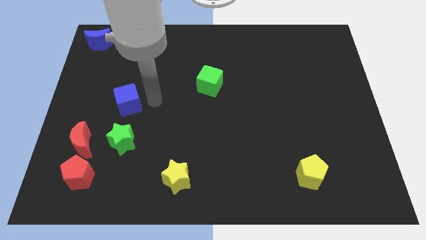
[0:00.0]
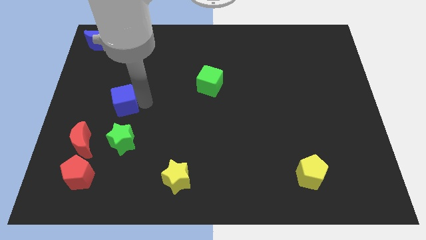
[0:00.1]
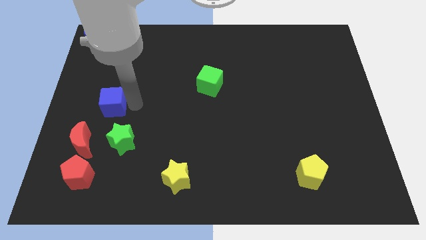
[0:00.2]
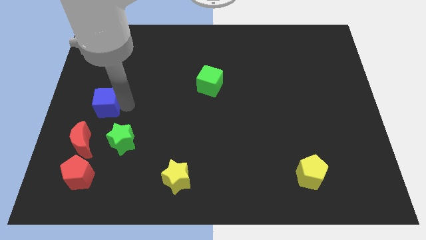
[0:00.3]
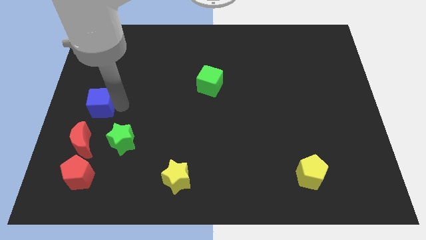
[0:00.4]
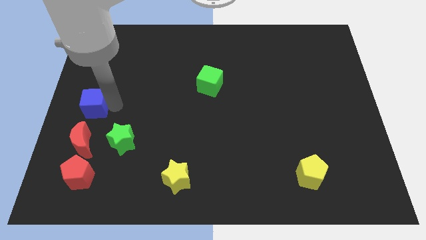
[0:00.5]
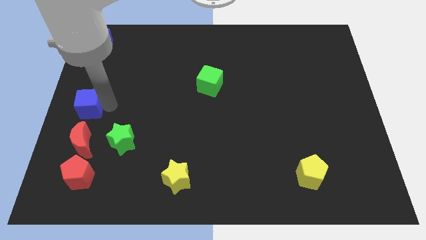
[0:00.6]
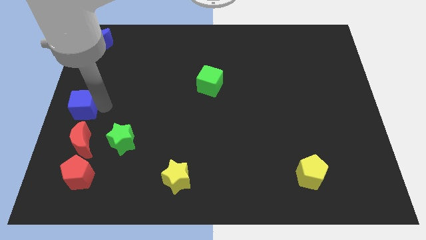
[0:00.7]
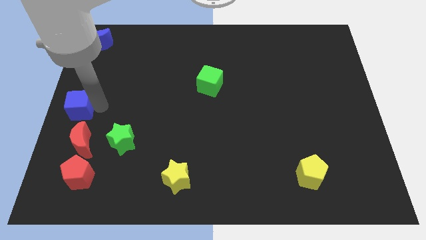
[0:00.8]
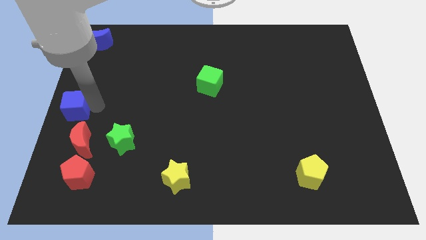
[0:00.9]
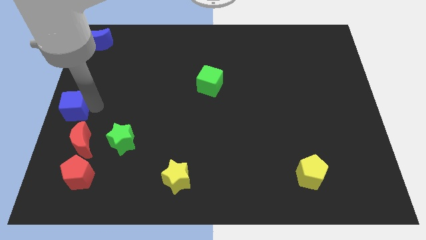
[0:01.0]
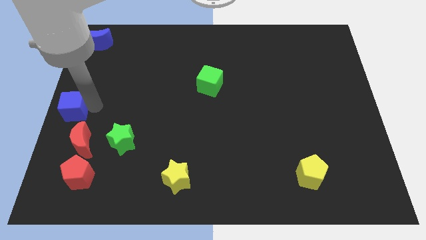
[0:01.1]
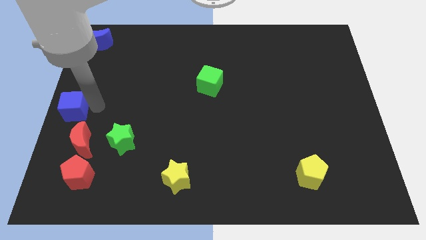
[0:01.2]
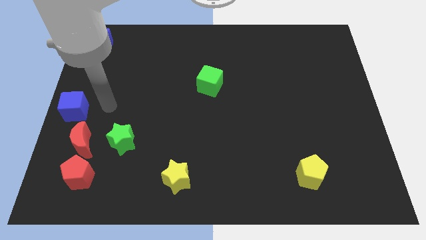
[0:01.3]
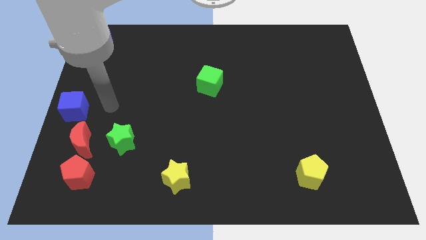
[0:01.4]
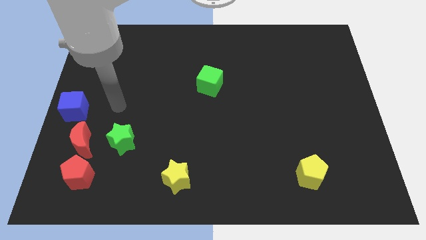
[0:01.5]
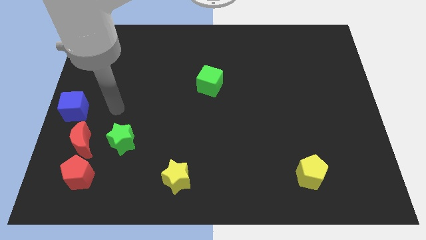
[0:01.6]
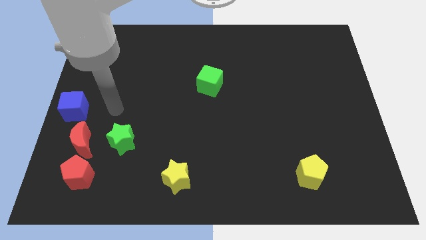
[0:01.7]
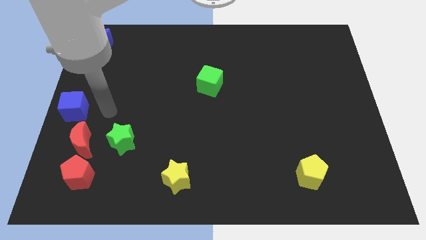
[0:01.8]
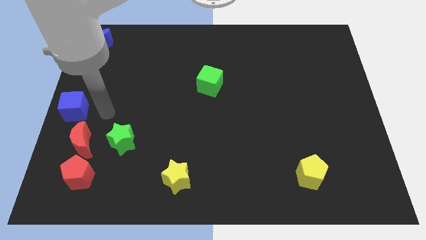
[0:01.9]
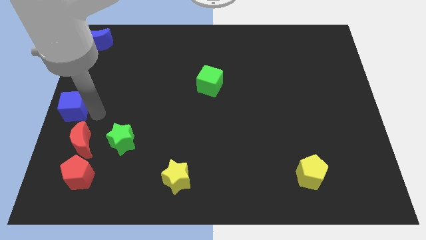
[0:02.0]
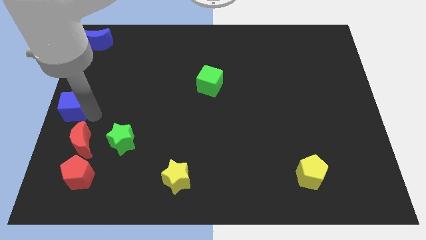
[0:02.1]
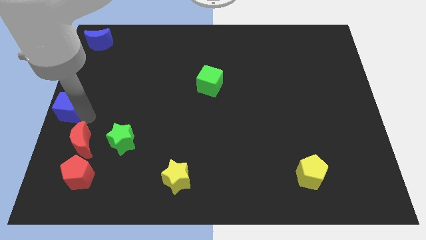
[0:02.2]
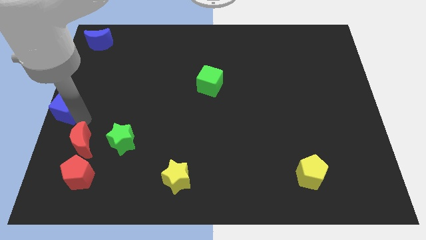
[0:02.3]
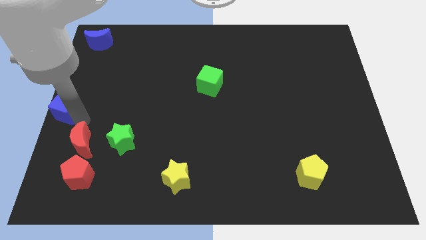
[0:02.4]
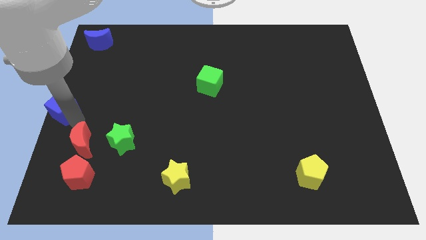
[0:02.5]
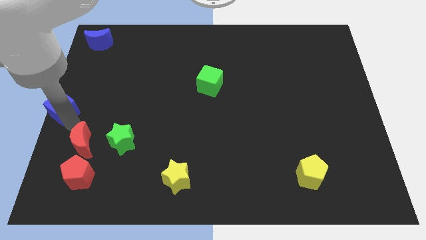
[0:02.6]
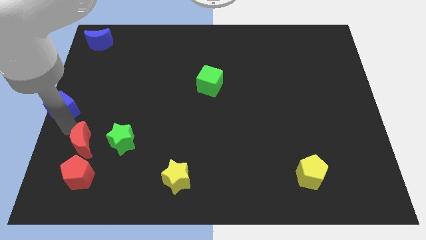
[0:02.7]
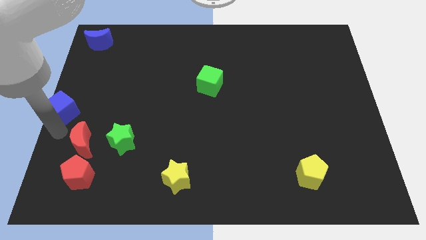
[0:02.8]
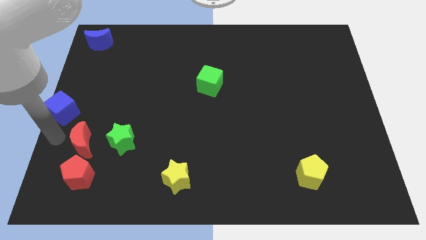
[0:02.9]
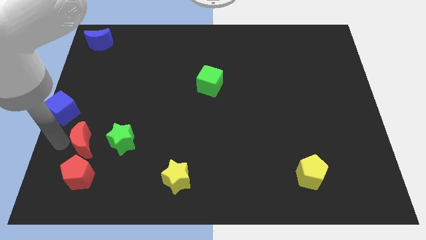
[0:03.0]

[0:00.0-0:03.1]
place blue cube at the center left

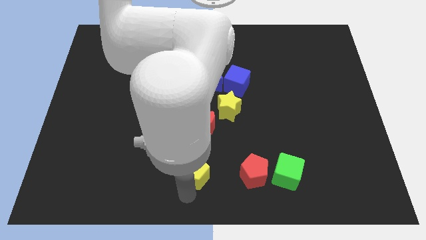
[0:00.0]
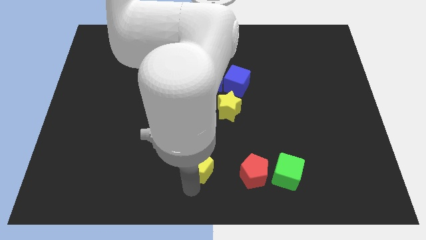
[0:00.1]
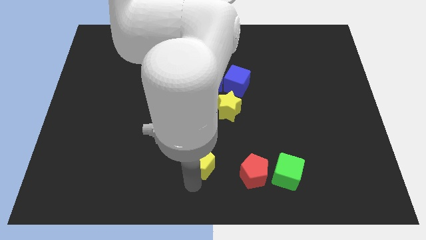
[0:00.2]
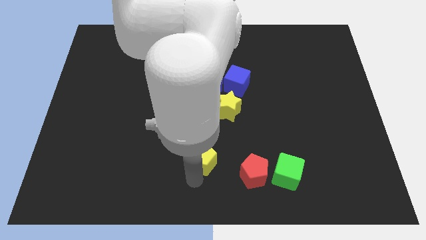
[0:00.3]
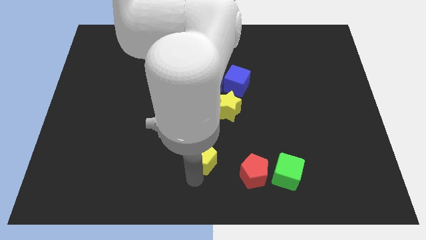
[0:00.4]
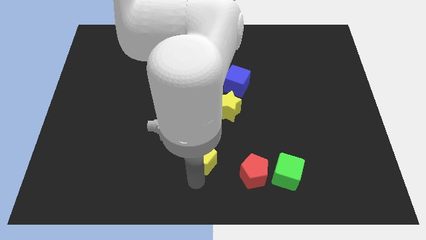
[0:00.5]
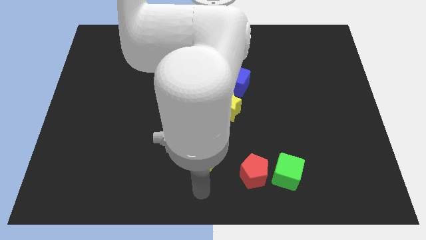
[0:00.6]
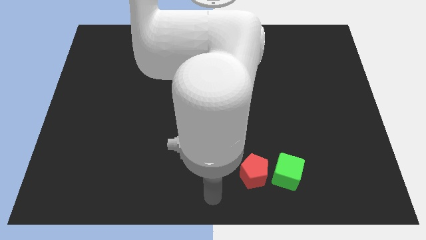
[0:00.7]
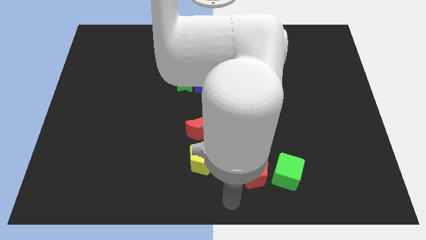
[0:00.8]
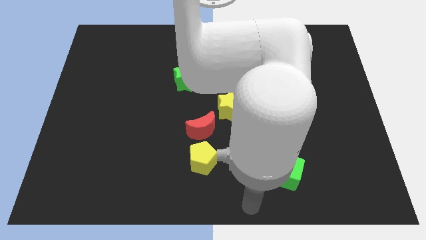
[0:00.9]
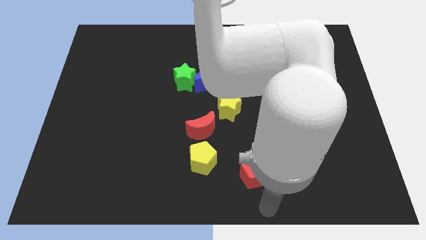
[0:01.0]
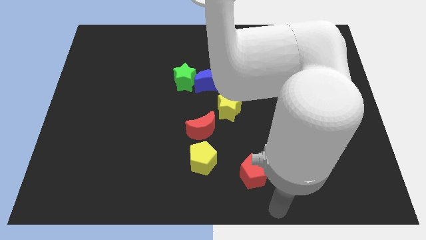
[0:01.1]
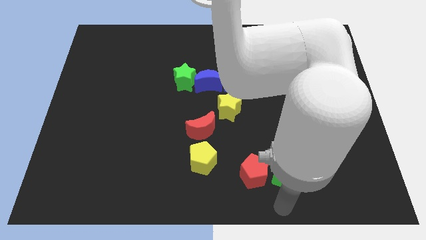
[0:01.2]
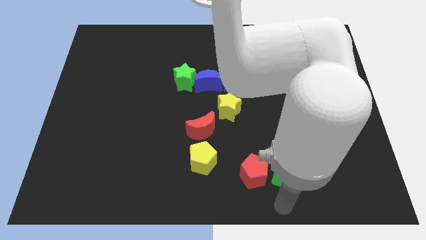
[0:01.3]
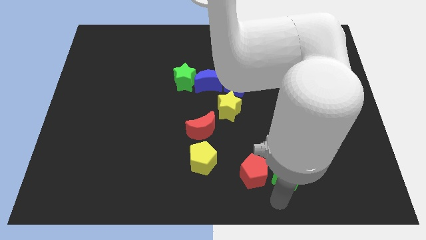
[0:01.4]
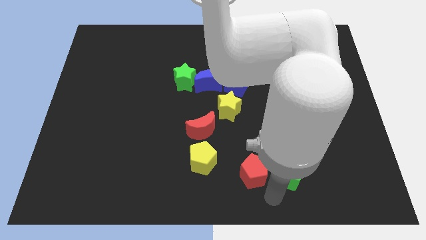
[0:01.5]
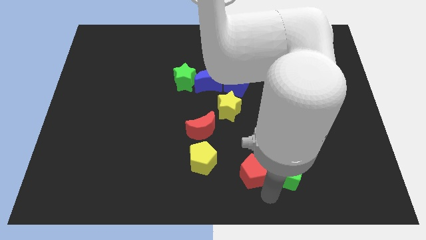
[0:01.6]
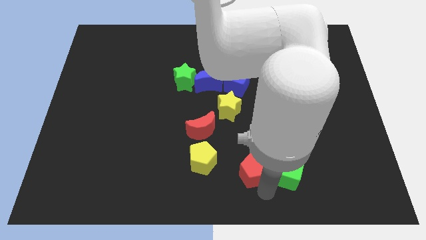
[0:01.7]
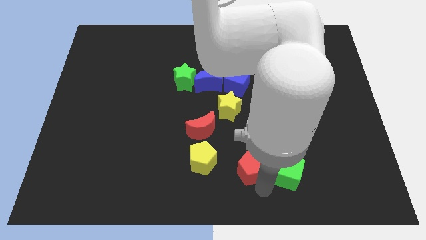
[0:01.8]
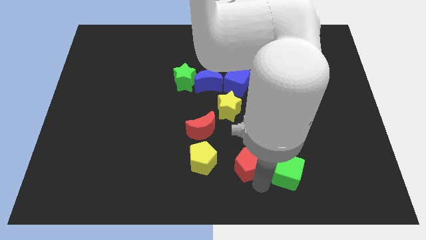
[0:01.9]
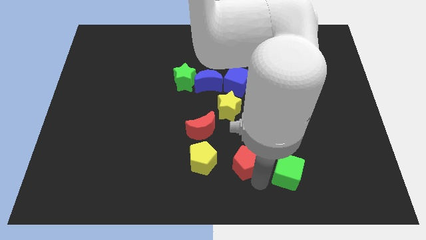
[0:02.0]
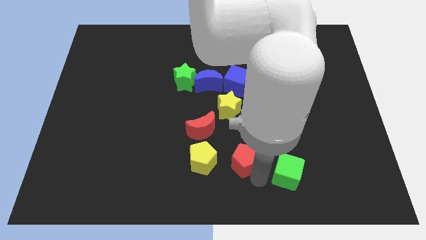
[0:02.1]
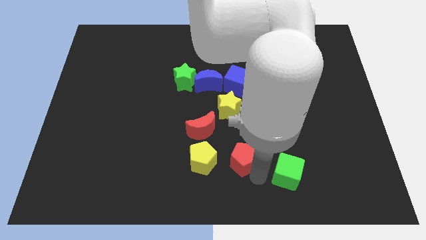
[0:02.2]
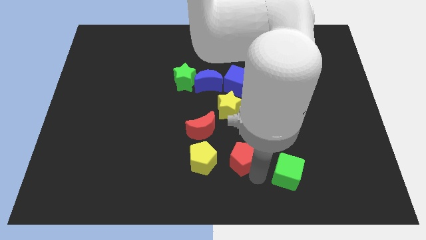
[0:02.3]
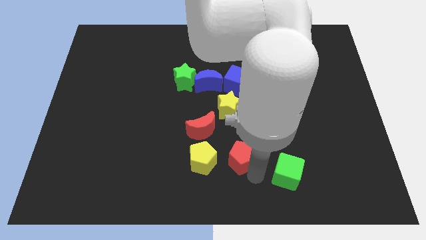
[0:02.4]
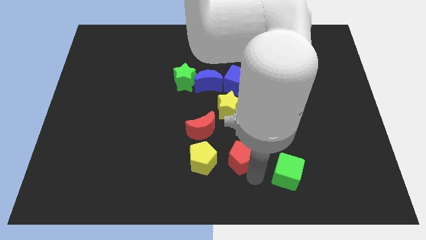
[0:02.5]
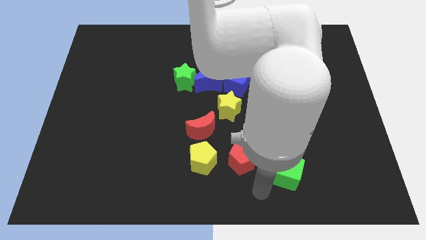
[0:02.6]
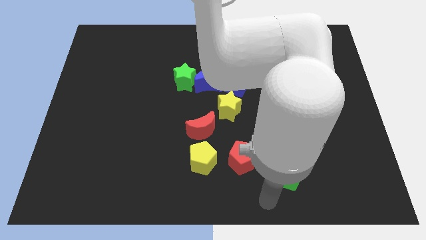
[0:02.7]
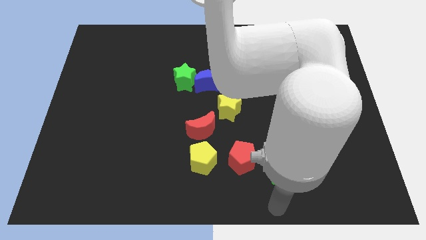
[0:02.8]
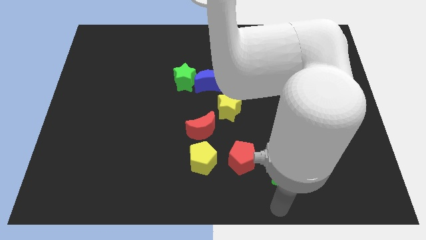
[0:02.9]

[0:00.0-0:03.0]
move red pentagon beside yellow pentagon

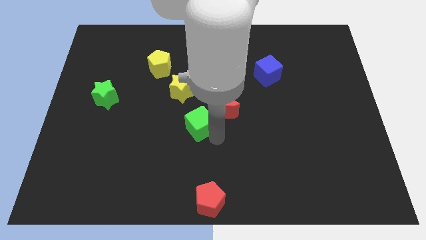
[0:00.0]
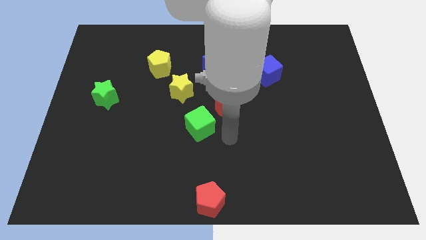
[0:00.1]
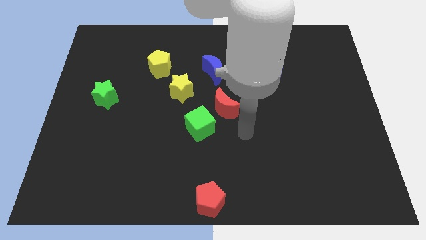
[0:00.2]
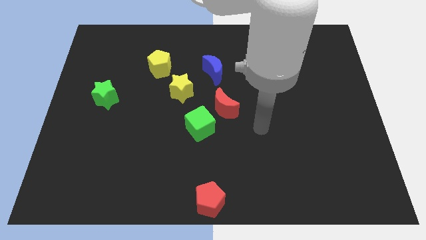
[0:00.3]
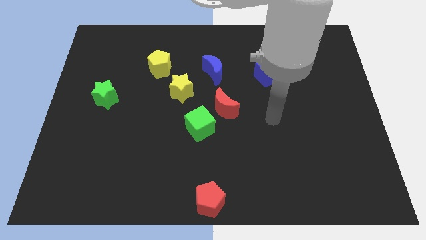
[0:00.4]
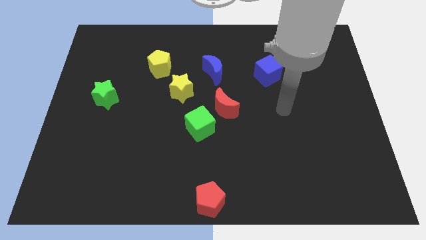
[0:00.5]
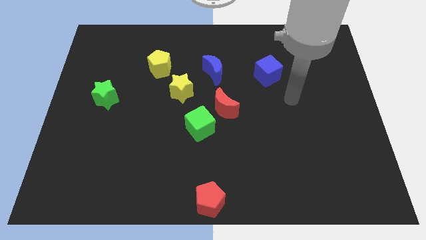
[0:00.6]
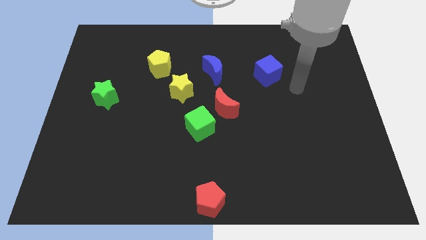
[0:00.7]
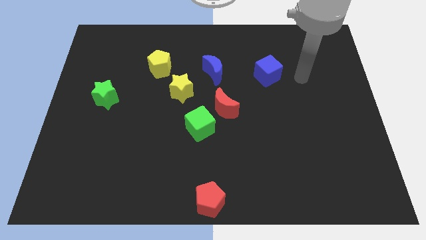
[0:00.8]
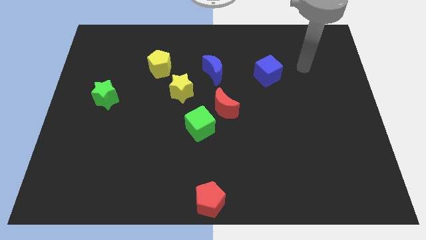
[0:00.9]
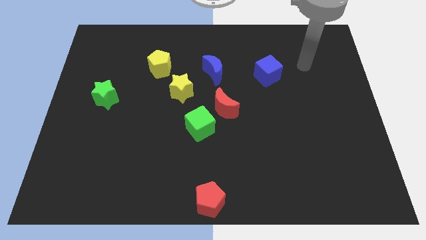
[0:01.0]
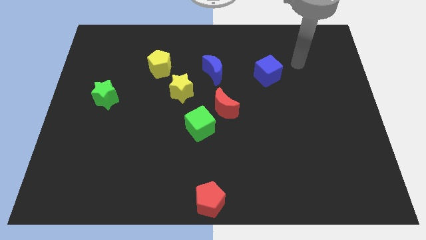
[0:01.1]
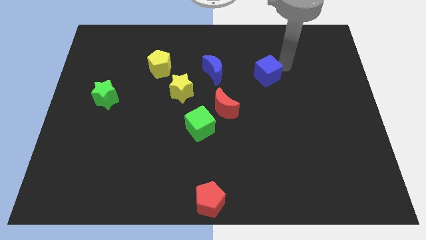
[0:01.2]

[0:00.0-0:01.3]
move the arm to the right of the blue cube

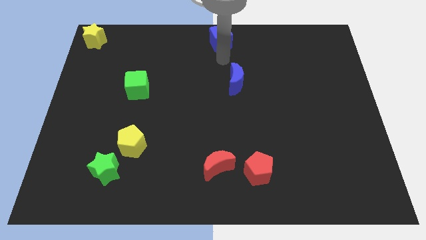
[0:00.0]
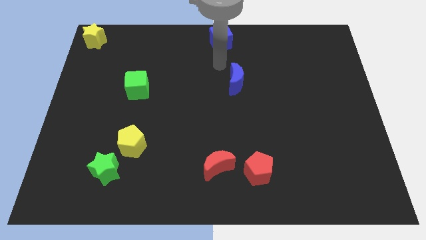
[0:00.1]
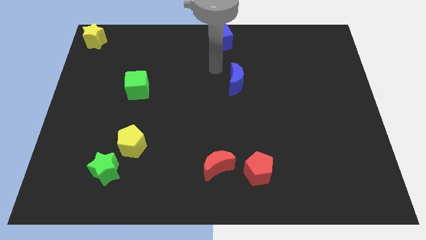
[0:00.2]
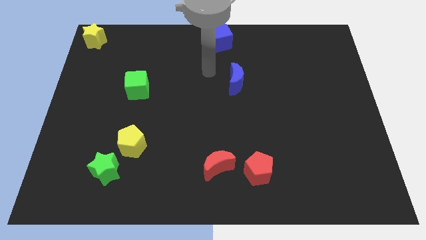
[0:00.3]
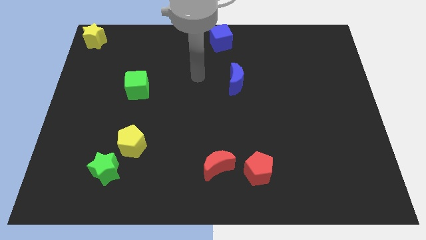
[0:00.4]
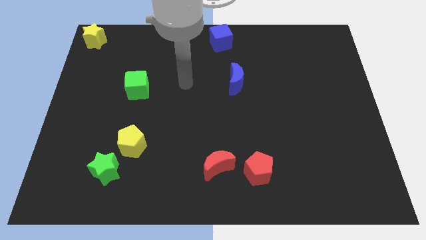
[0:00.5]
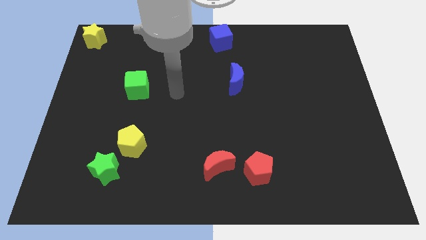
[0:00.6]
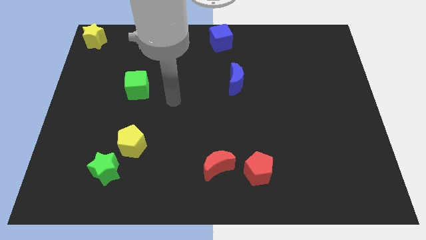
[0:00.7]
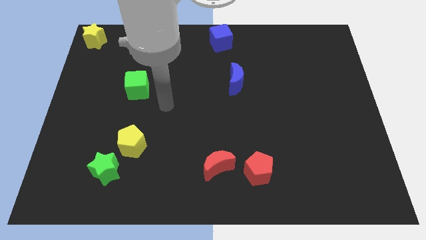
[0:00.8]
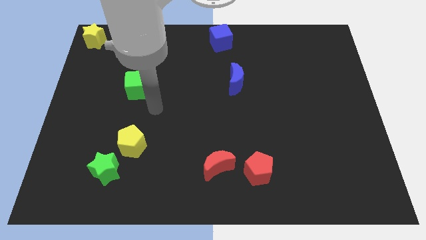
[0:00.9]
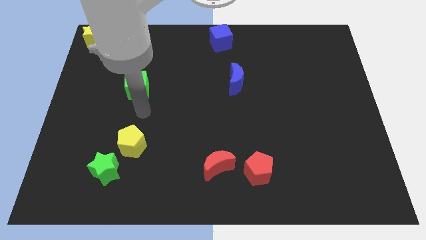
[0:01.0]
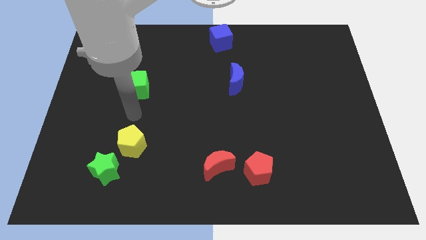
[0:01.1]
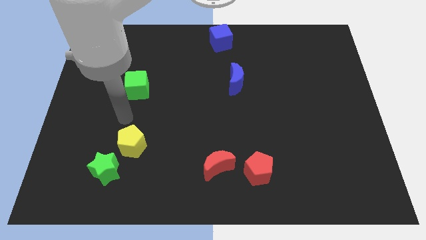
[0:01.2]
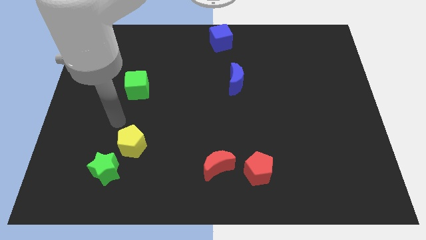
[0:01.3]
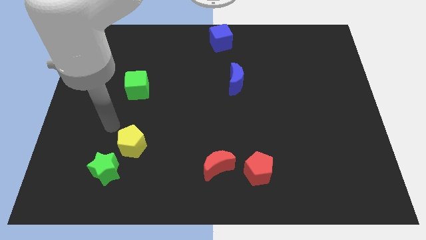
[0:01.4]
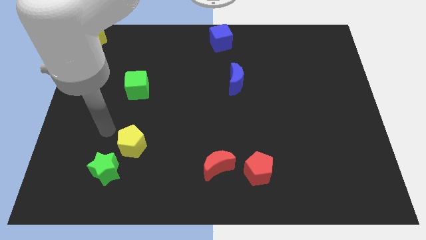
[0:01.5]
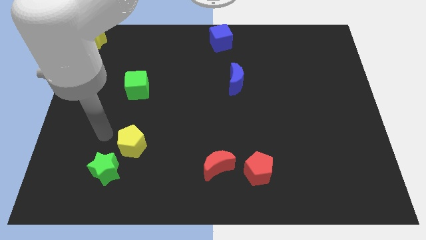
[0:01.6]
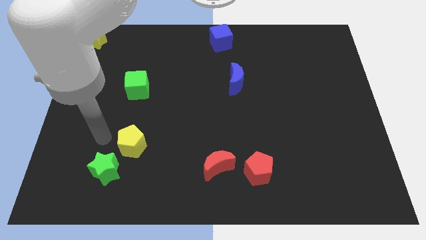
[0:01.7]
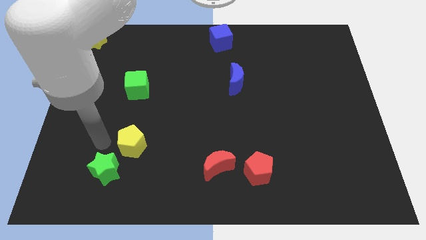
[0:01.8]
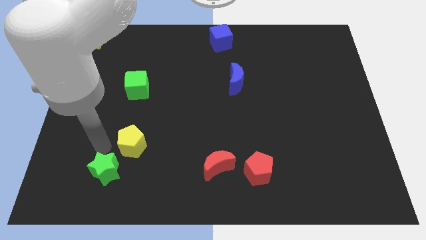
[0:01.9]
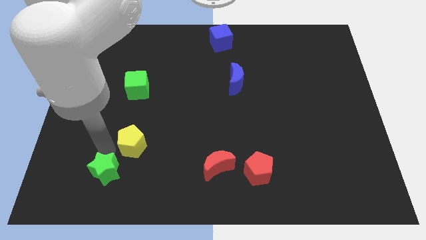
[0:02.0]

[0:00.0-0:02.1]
point your arm to the bottom left side of the yellow pentagon
